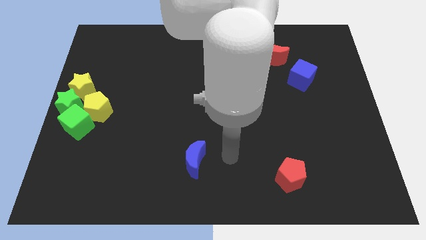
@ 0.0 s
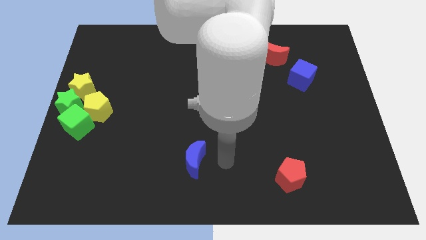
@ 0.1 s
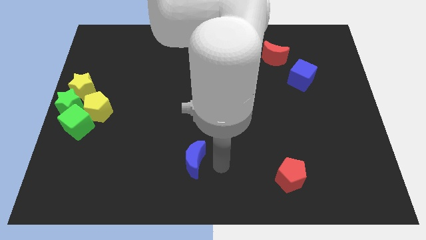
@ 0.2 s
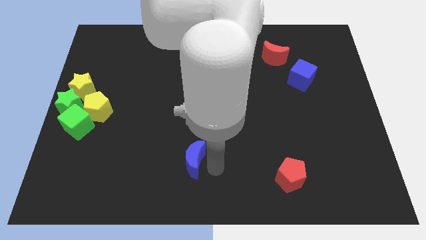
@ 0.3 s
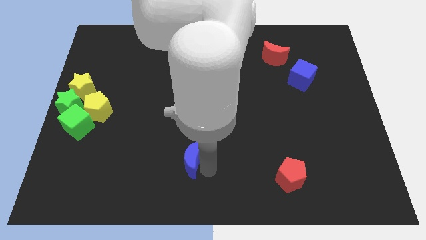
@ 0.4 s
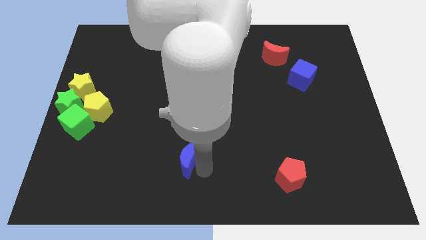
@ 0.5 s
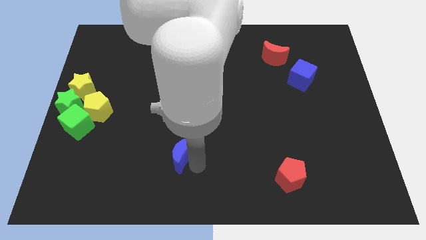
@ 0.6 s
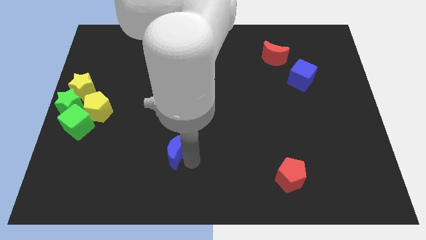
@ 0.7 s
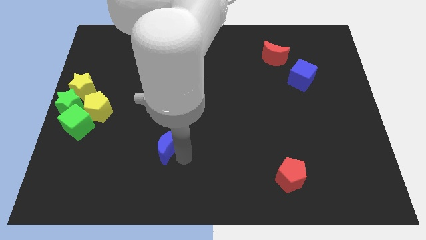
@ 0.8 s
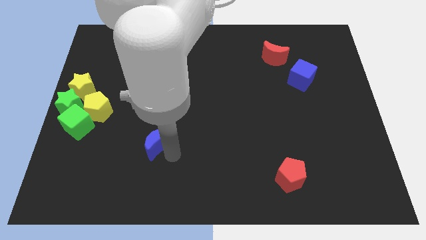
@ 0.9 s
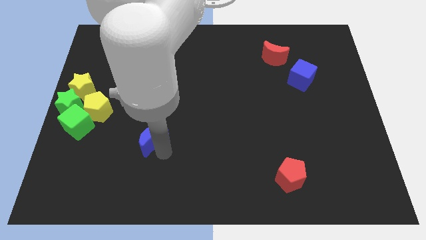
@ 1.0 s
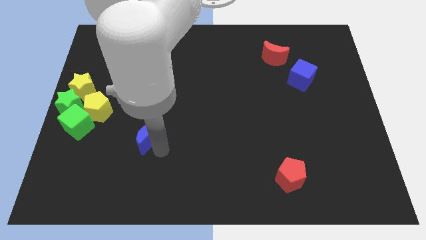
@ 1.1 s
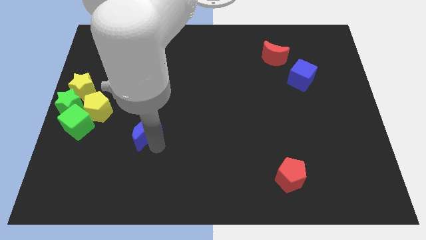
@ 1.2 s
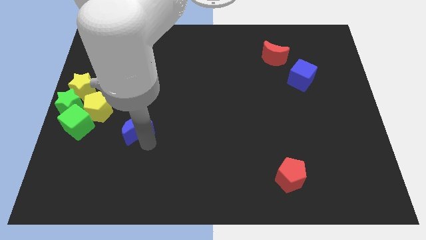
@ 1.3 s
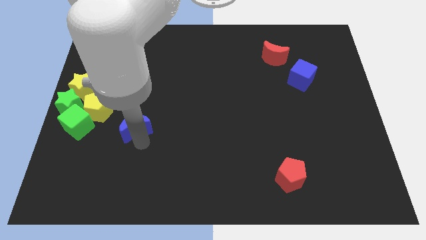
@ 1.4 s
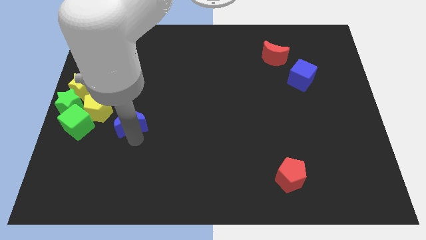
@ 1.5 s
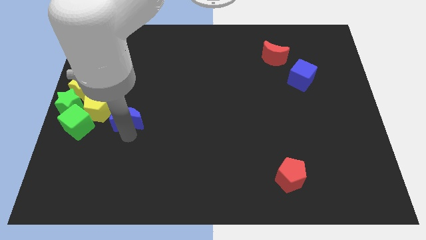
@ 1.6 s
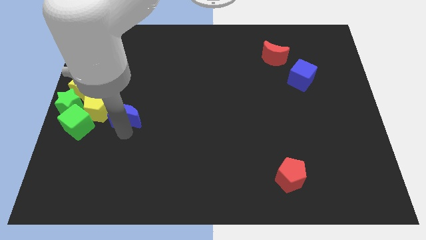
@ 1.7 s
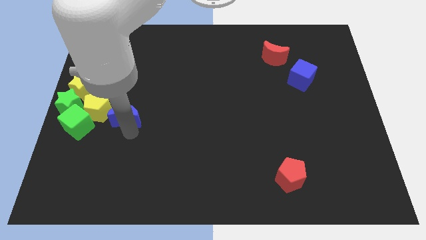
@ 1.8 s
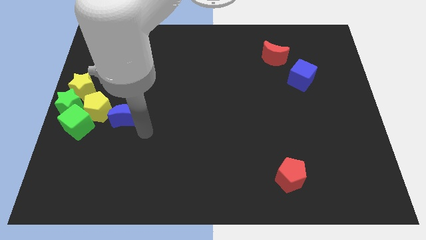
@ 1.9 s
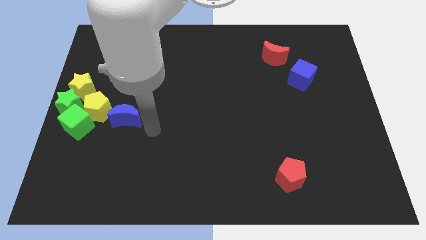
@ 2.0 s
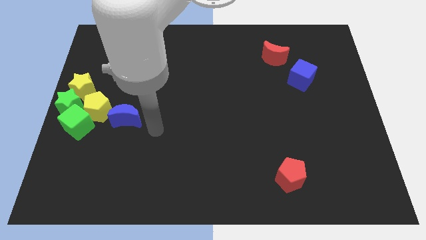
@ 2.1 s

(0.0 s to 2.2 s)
move the blue crescent towards yellow pentagon

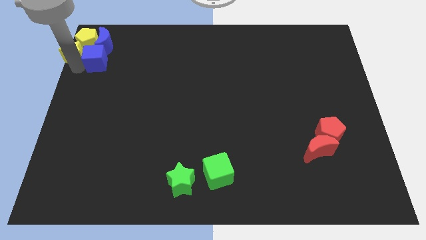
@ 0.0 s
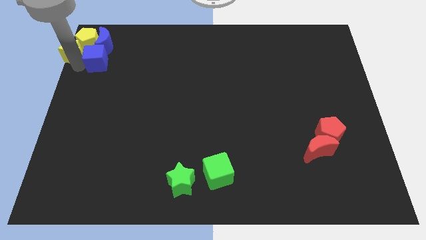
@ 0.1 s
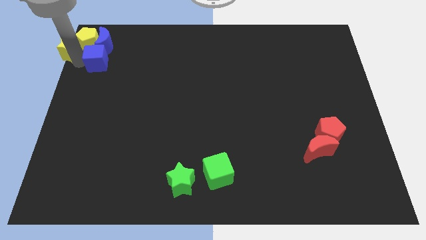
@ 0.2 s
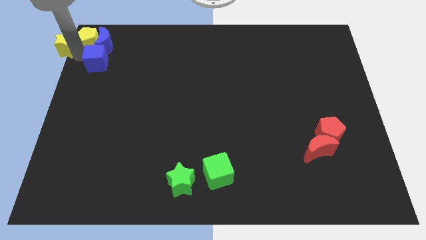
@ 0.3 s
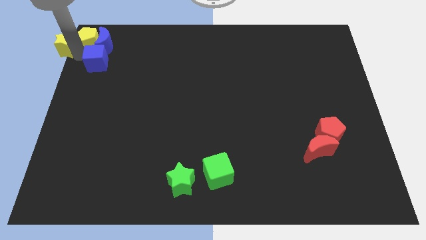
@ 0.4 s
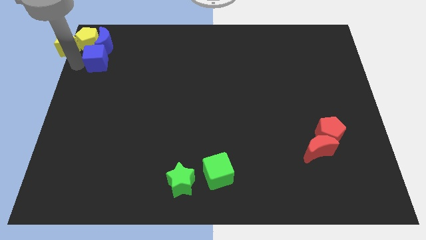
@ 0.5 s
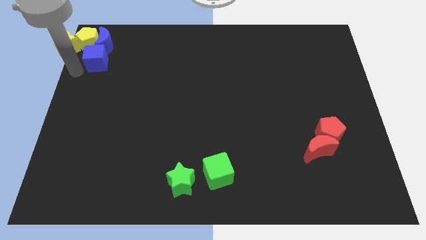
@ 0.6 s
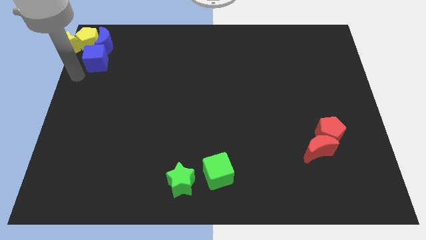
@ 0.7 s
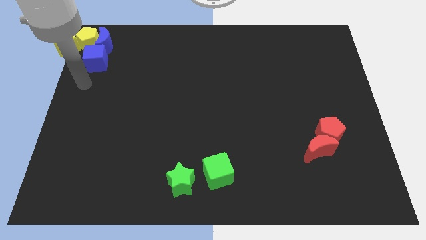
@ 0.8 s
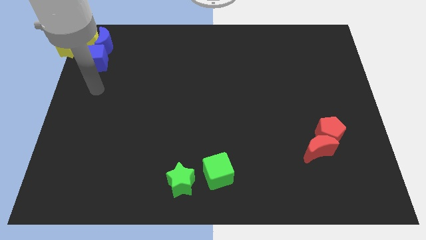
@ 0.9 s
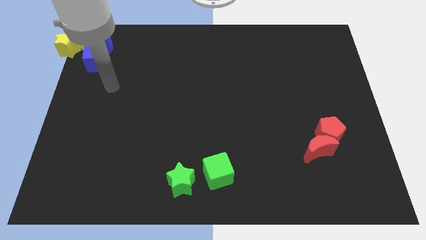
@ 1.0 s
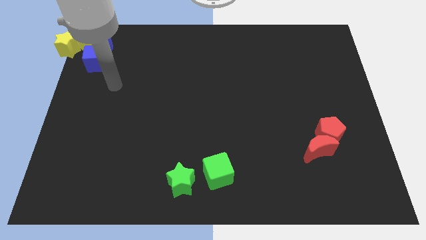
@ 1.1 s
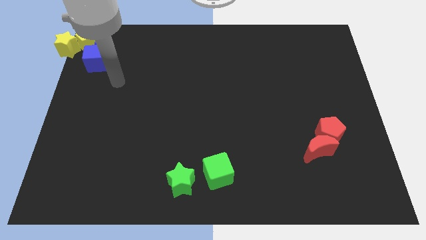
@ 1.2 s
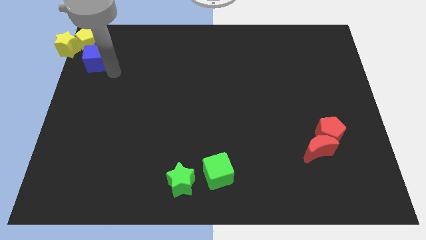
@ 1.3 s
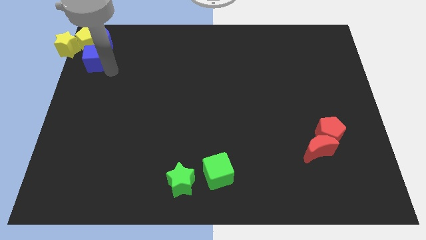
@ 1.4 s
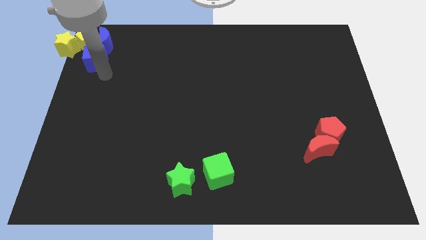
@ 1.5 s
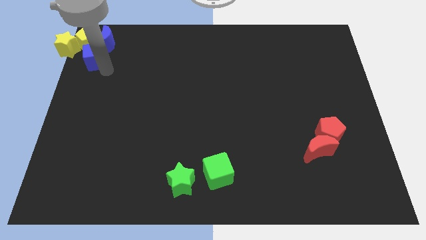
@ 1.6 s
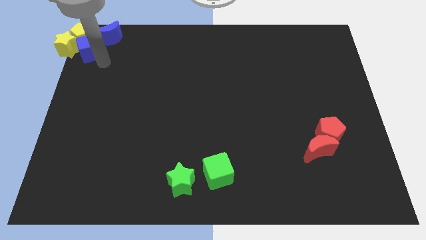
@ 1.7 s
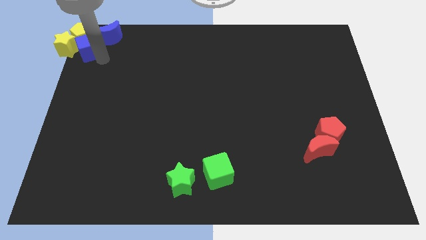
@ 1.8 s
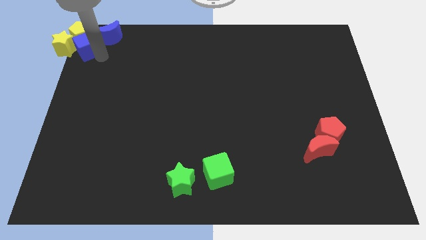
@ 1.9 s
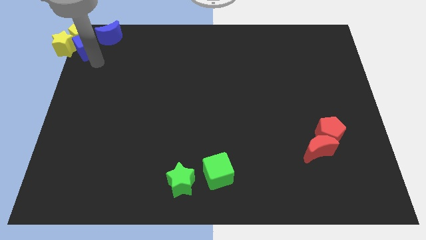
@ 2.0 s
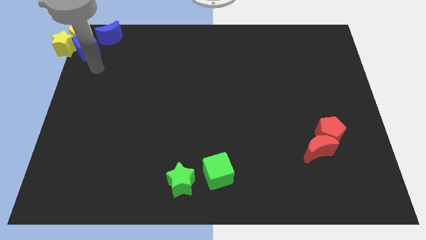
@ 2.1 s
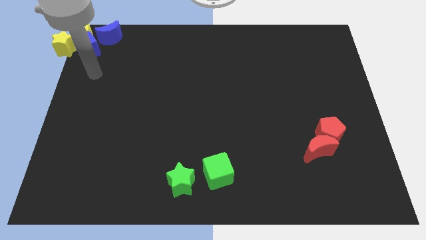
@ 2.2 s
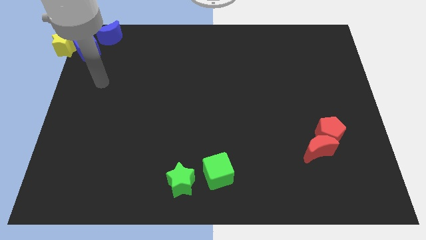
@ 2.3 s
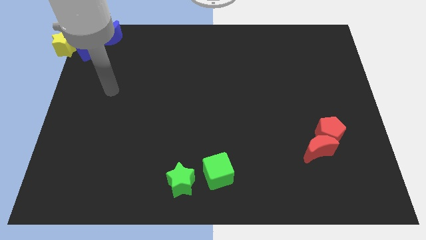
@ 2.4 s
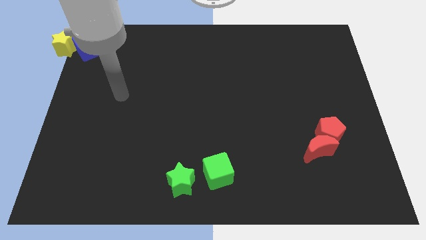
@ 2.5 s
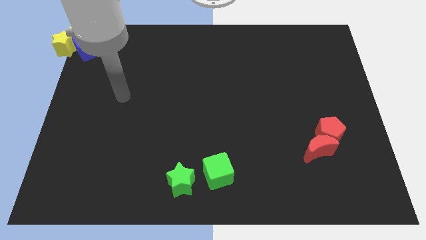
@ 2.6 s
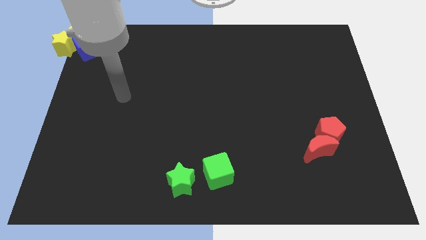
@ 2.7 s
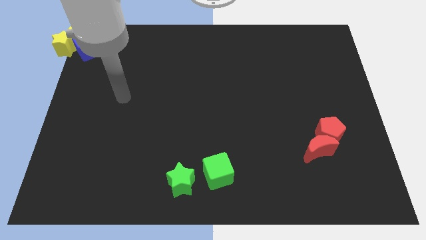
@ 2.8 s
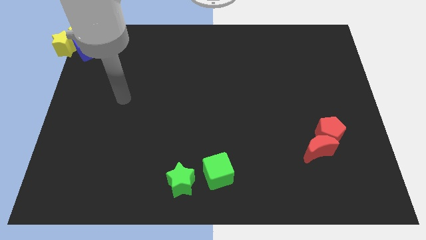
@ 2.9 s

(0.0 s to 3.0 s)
push the blue cube into the yellow blocks

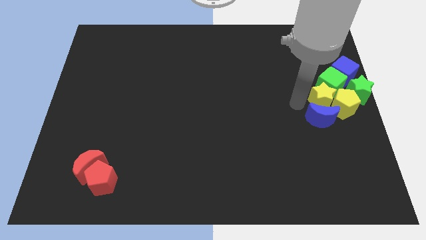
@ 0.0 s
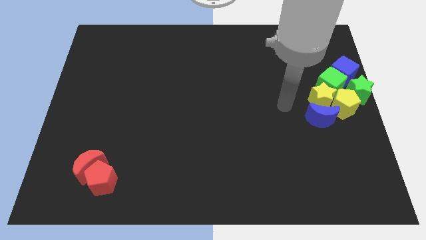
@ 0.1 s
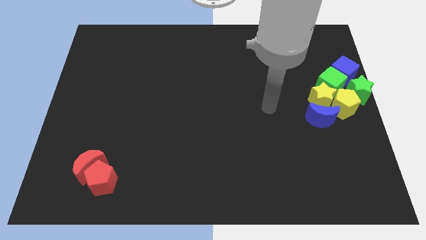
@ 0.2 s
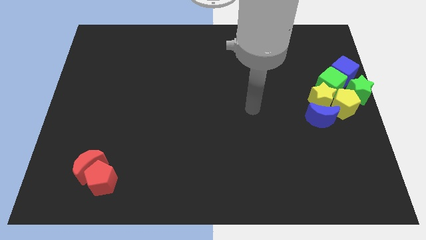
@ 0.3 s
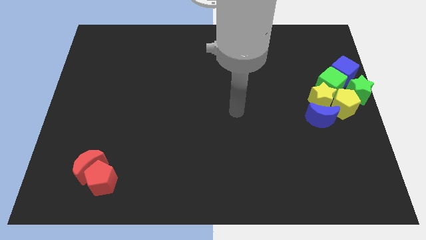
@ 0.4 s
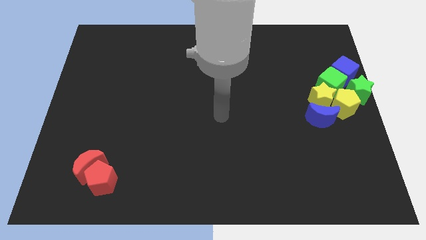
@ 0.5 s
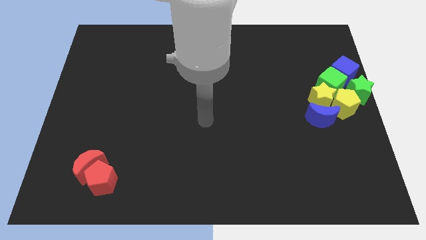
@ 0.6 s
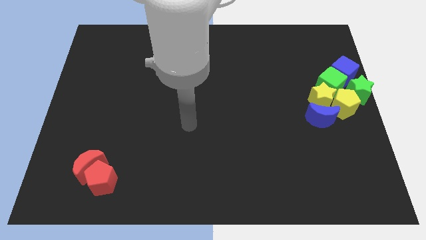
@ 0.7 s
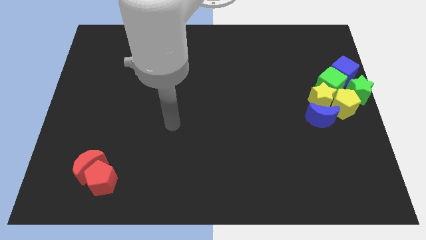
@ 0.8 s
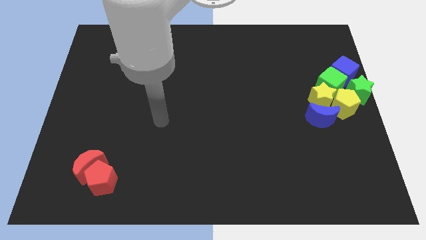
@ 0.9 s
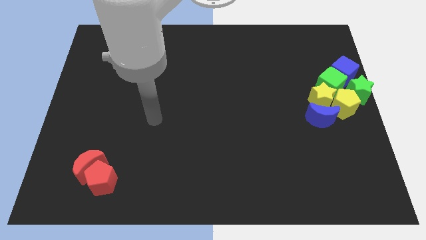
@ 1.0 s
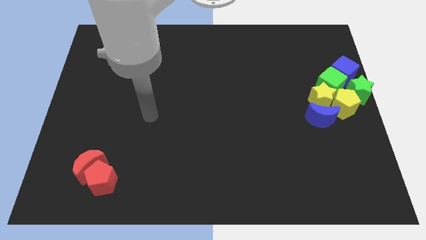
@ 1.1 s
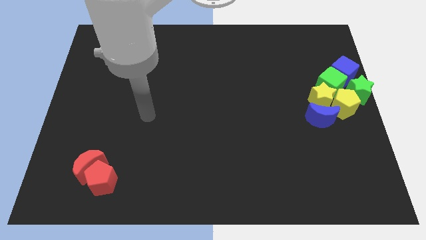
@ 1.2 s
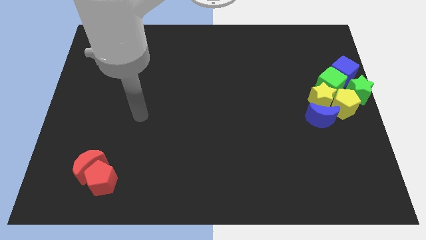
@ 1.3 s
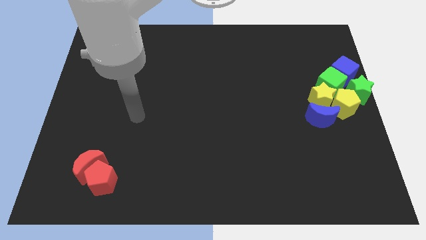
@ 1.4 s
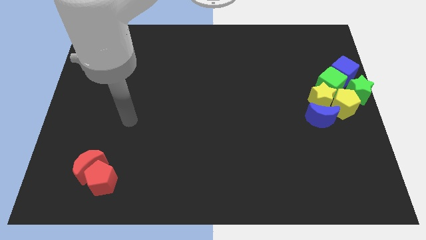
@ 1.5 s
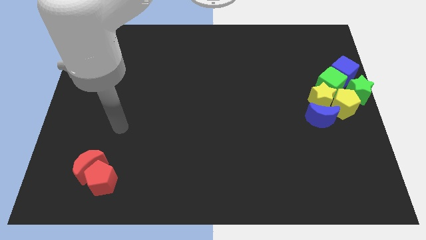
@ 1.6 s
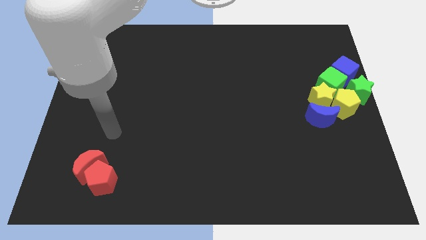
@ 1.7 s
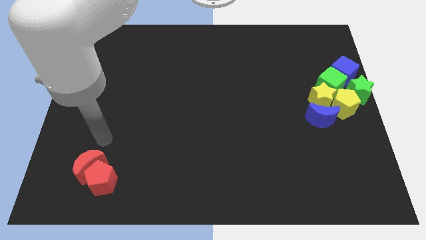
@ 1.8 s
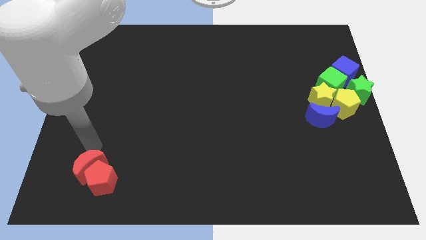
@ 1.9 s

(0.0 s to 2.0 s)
move your arm towards the red blocks

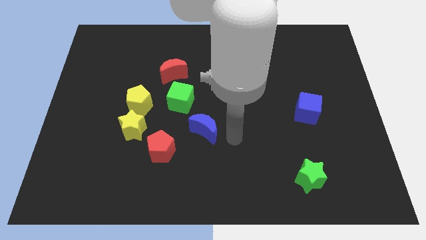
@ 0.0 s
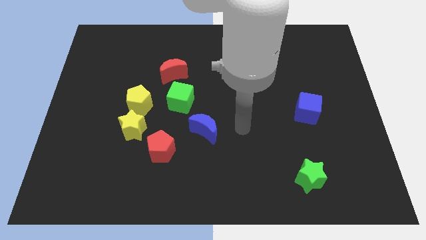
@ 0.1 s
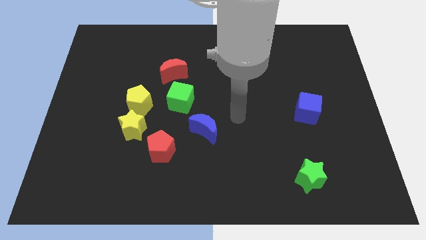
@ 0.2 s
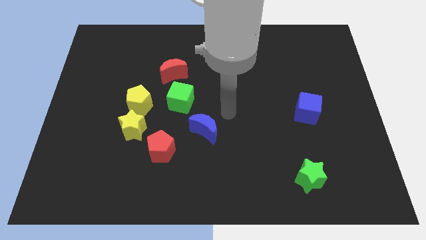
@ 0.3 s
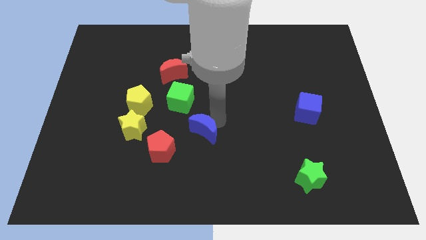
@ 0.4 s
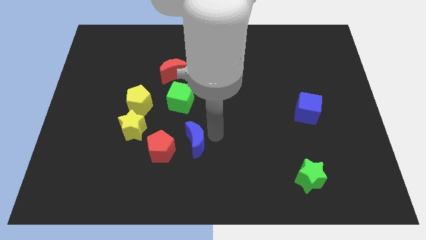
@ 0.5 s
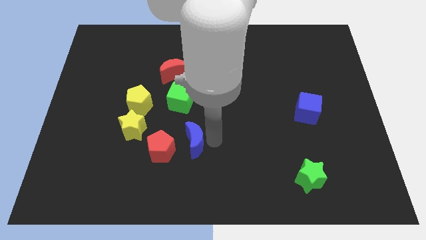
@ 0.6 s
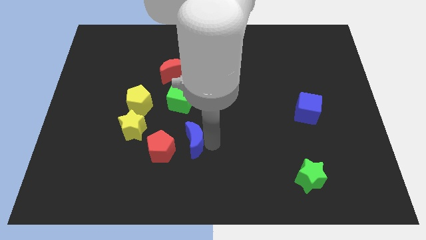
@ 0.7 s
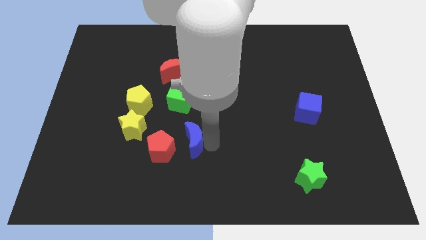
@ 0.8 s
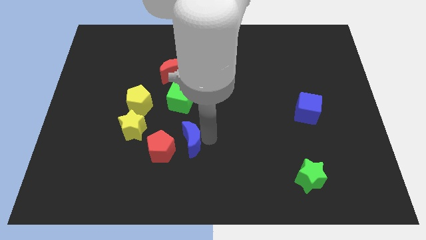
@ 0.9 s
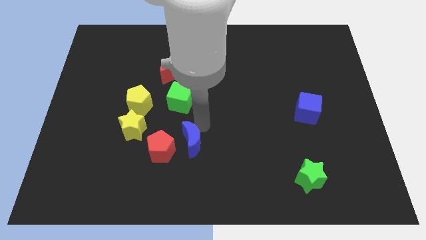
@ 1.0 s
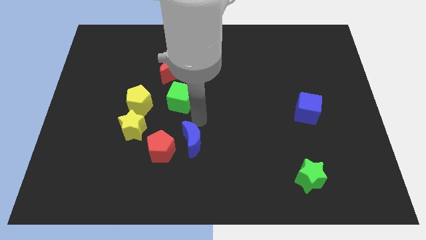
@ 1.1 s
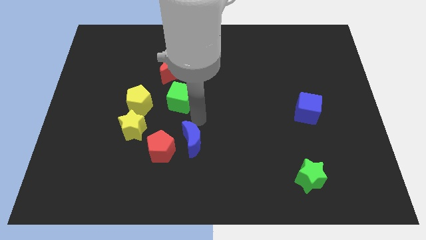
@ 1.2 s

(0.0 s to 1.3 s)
place the blue moon to the right side of the red pentagon

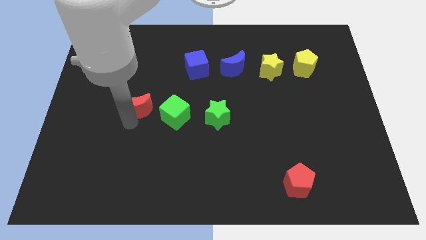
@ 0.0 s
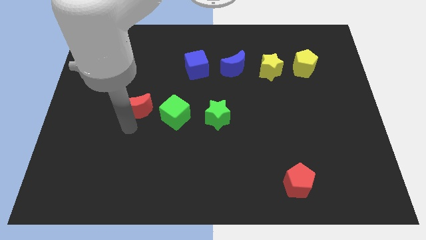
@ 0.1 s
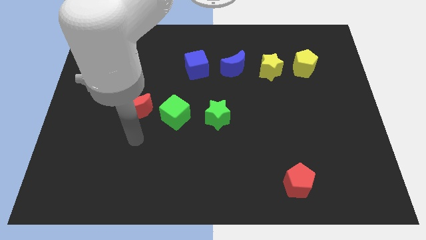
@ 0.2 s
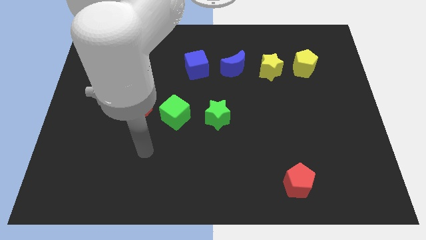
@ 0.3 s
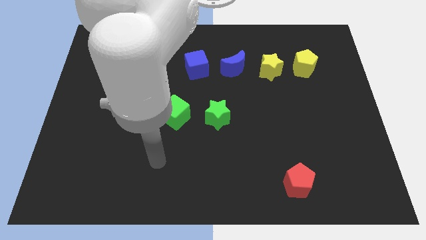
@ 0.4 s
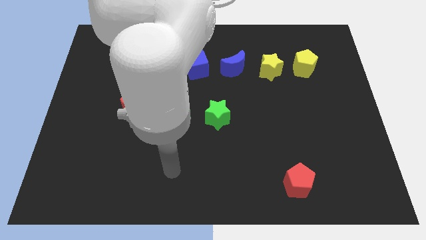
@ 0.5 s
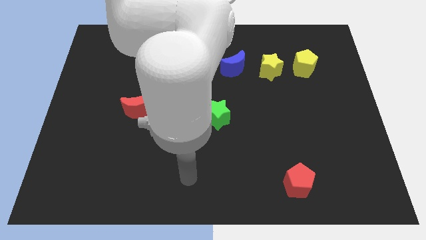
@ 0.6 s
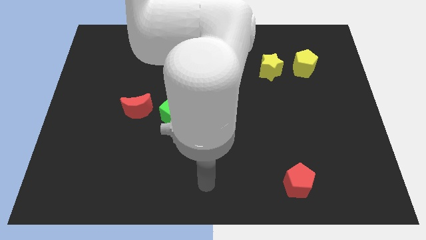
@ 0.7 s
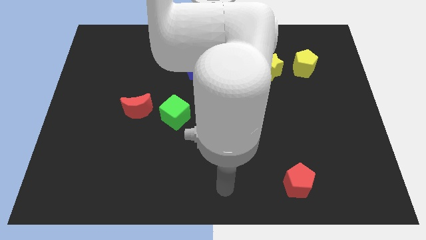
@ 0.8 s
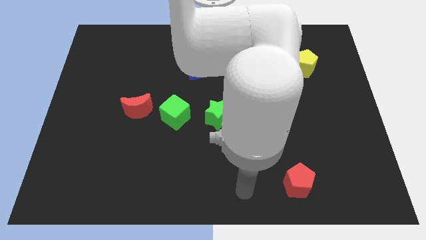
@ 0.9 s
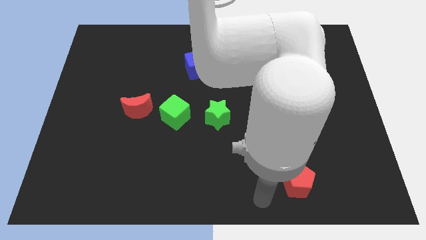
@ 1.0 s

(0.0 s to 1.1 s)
push your arm away from the red crescent
